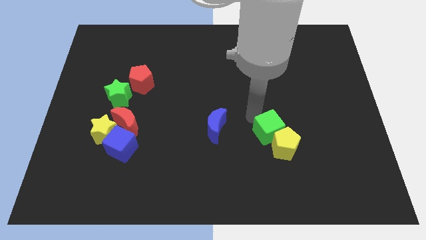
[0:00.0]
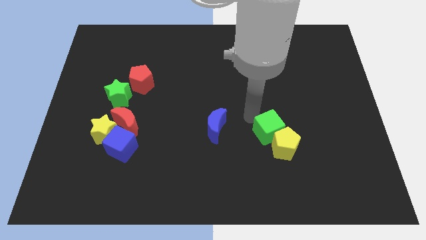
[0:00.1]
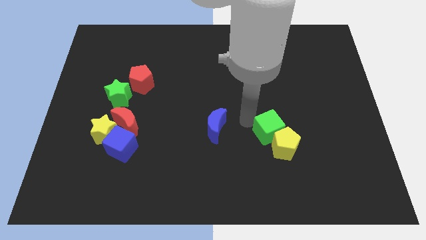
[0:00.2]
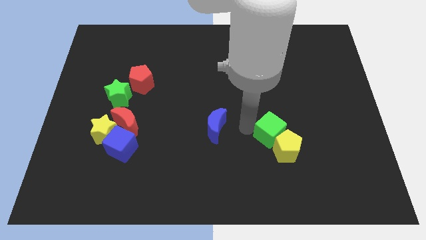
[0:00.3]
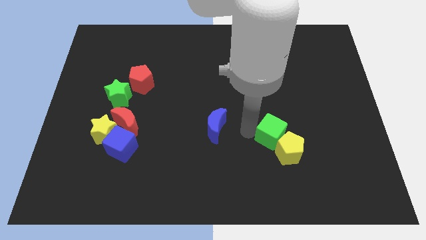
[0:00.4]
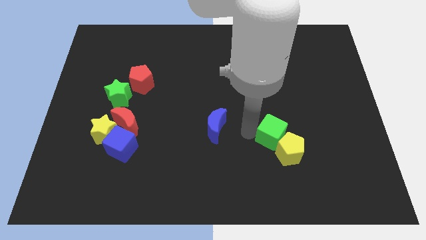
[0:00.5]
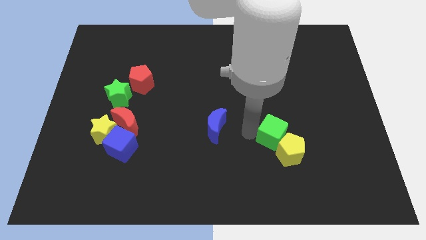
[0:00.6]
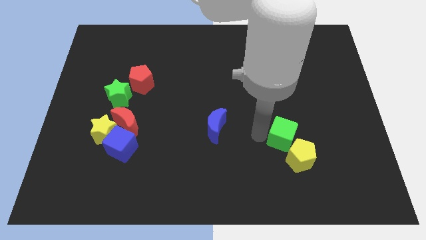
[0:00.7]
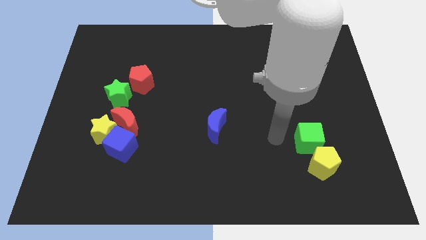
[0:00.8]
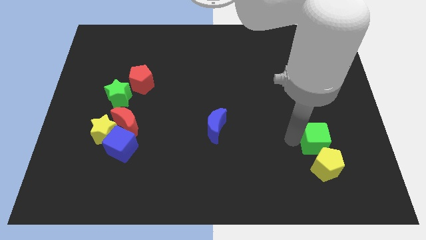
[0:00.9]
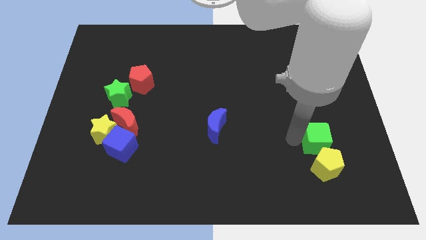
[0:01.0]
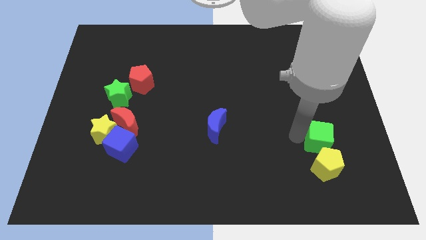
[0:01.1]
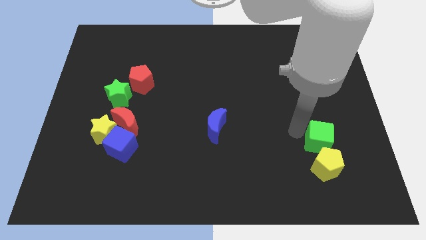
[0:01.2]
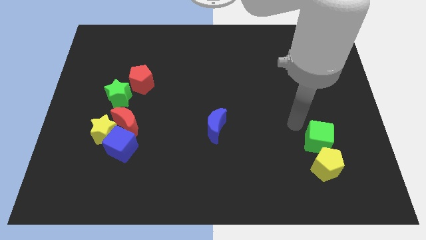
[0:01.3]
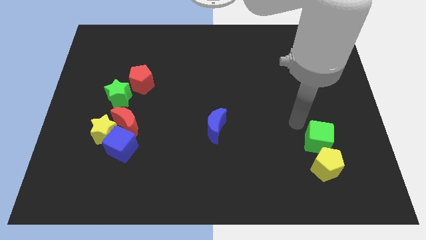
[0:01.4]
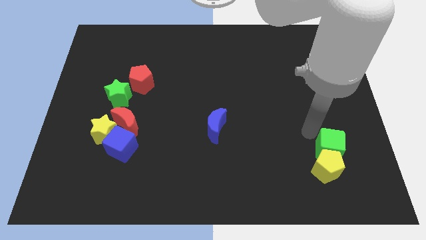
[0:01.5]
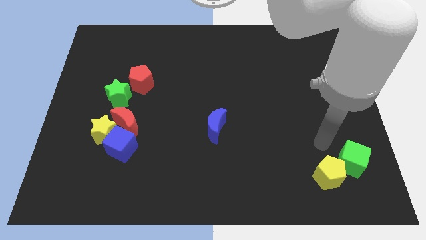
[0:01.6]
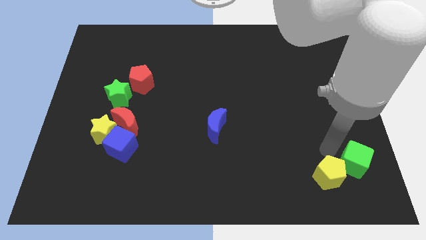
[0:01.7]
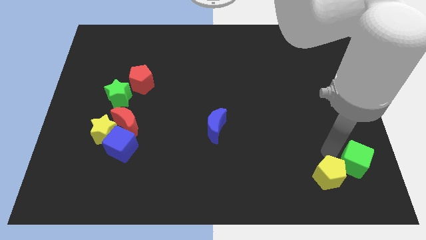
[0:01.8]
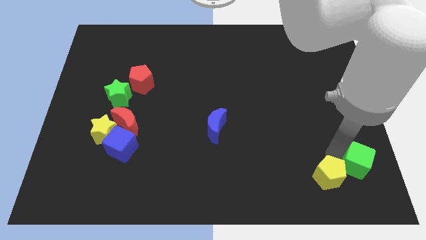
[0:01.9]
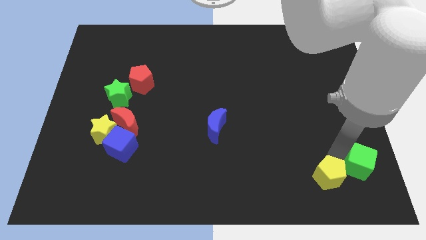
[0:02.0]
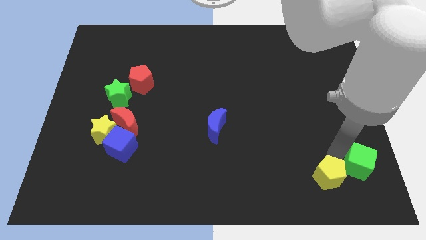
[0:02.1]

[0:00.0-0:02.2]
push both green cube and yellow pentagon to bottom right of the board

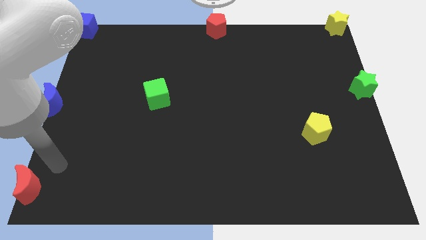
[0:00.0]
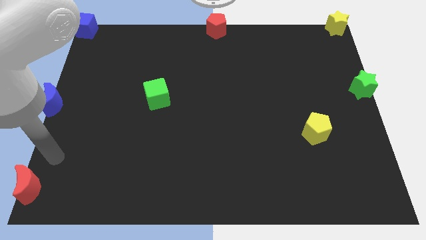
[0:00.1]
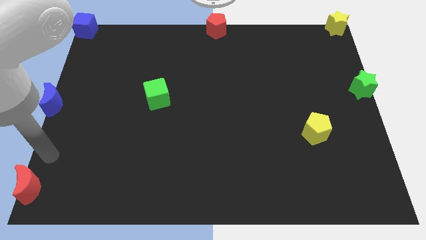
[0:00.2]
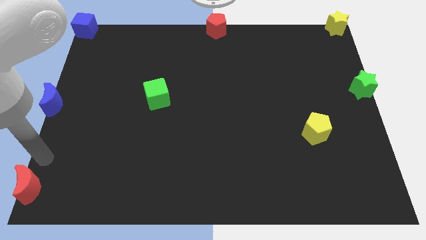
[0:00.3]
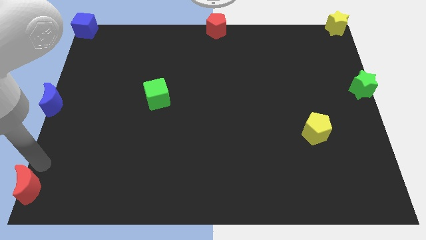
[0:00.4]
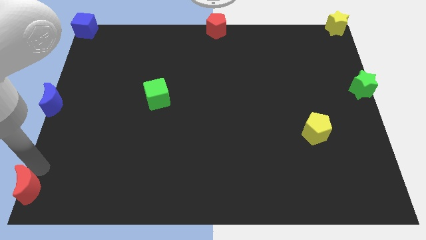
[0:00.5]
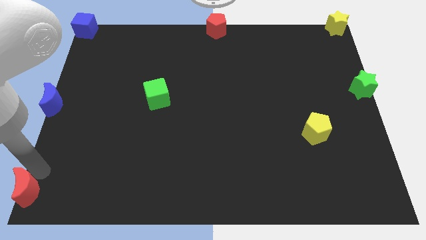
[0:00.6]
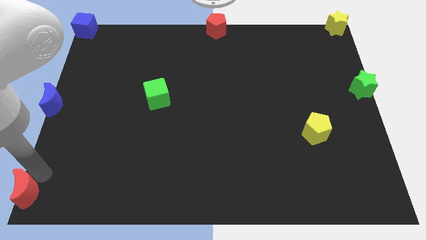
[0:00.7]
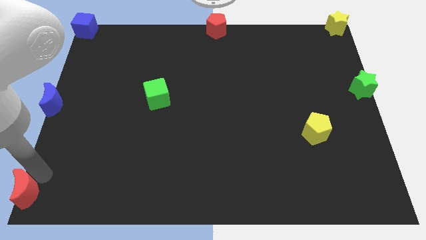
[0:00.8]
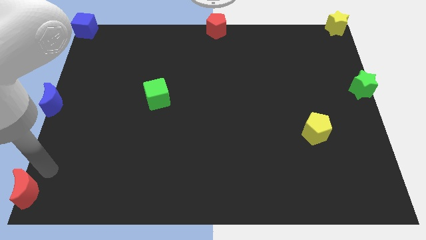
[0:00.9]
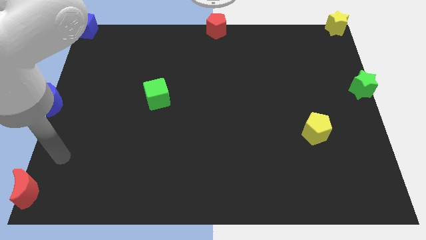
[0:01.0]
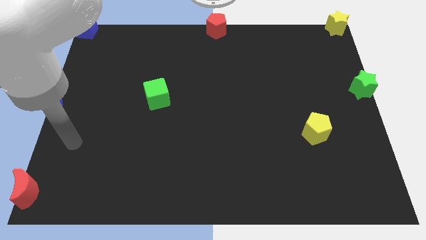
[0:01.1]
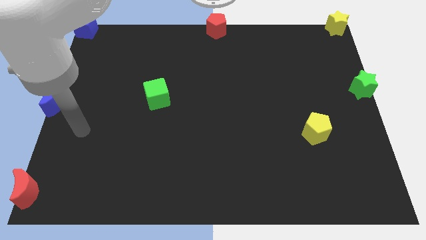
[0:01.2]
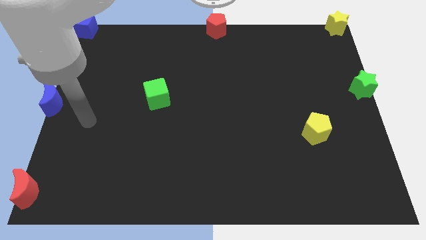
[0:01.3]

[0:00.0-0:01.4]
push the red moon towards the bottom left corner

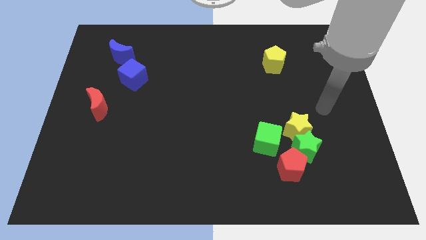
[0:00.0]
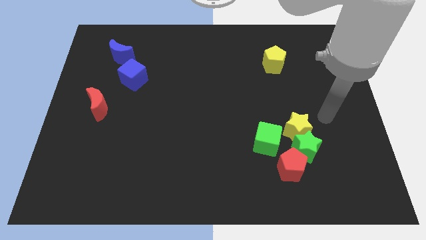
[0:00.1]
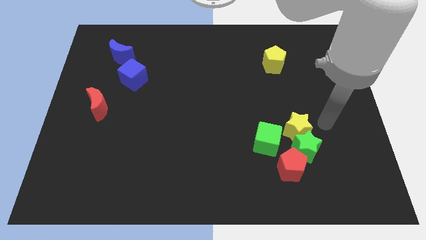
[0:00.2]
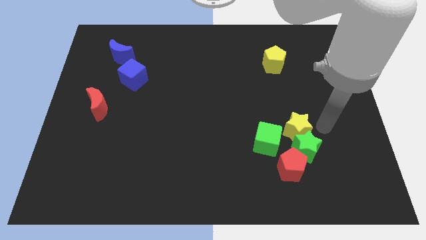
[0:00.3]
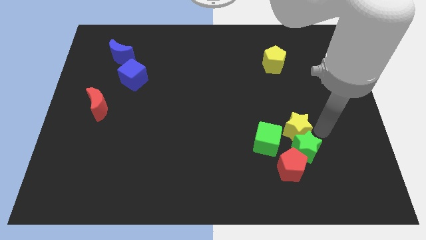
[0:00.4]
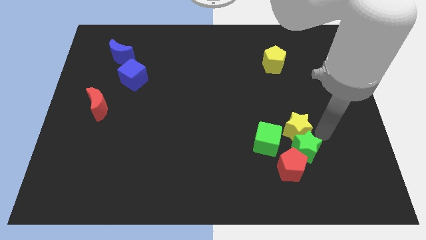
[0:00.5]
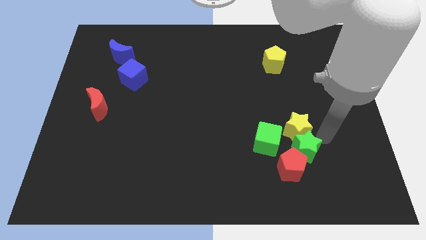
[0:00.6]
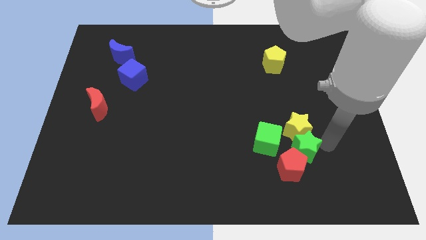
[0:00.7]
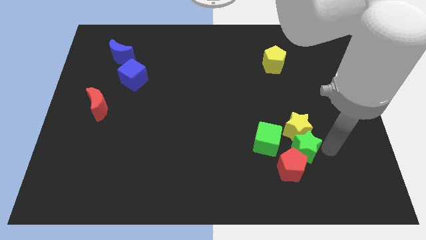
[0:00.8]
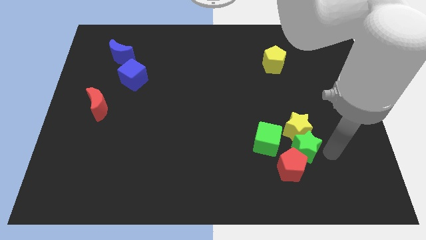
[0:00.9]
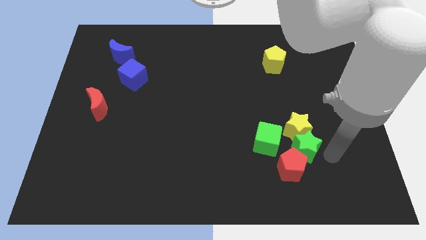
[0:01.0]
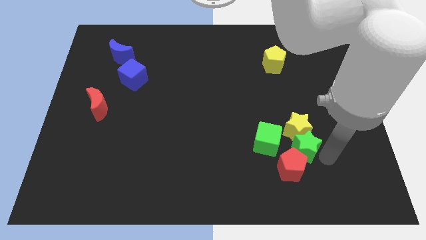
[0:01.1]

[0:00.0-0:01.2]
move your arm on the right side of the green star

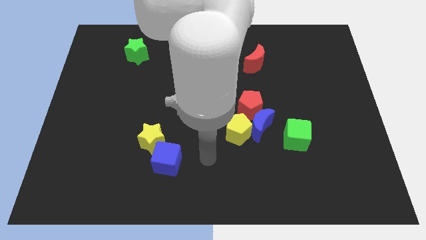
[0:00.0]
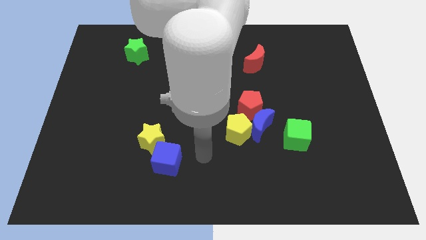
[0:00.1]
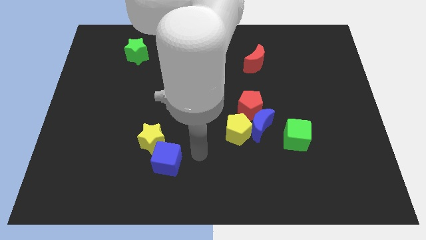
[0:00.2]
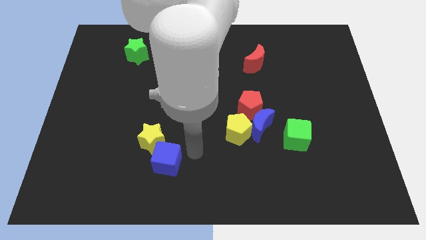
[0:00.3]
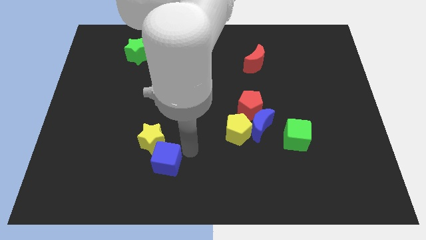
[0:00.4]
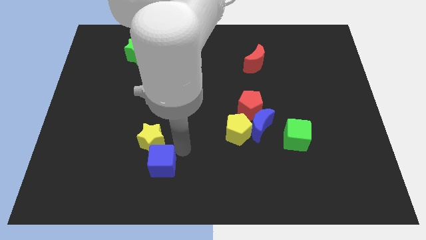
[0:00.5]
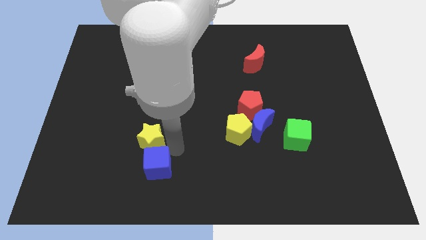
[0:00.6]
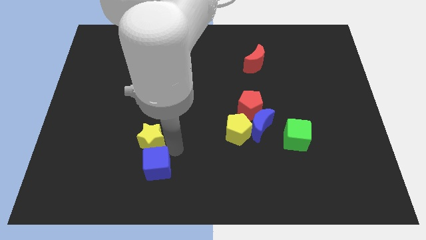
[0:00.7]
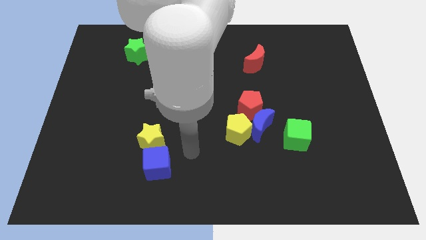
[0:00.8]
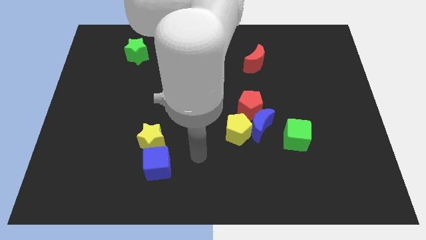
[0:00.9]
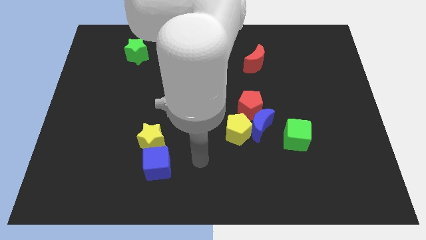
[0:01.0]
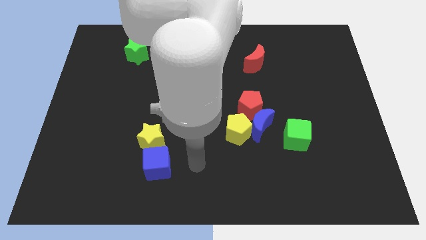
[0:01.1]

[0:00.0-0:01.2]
move the blue cube to the left slightly

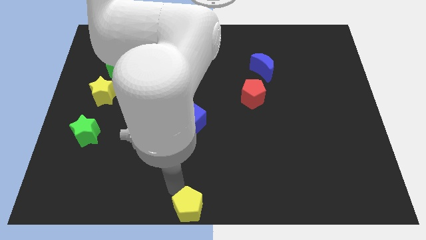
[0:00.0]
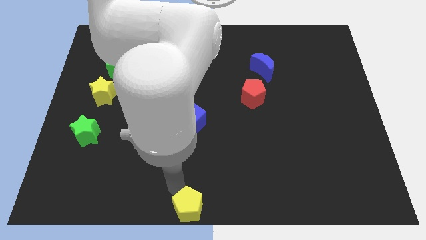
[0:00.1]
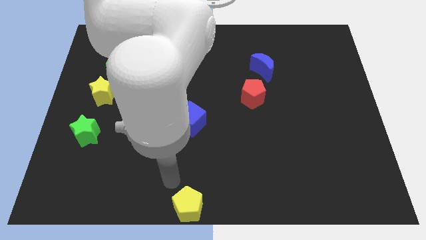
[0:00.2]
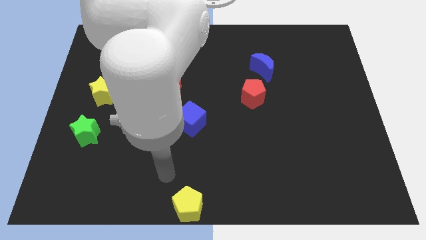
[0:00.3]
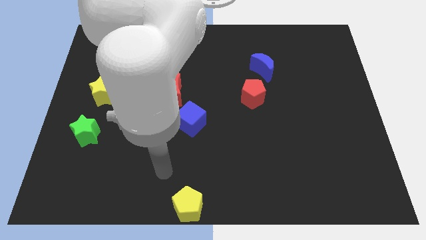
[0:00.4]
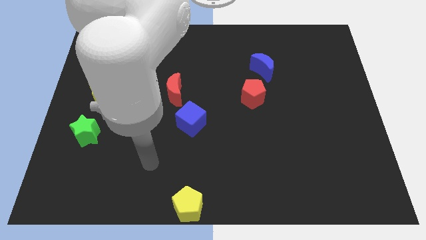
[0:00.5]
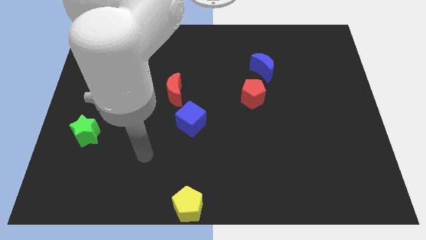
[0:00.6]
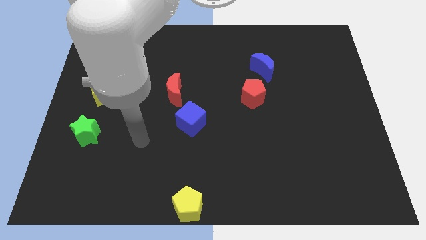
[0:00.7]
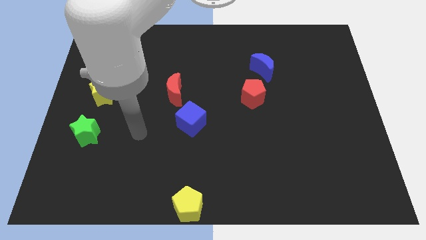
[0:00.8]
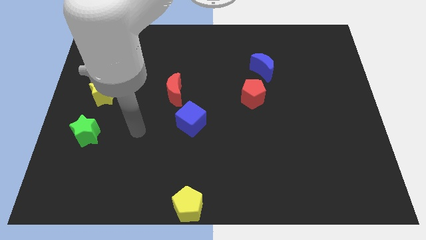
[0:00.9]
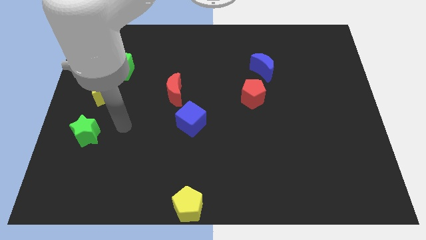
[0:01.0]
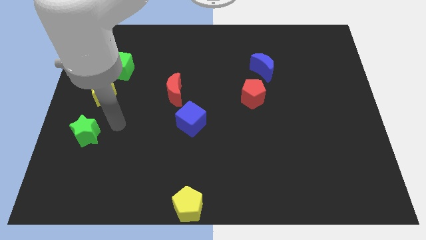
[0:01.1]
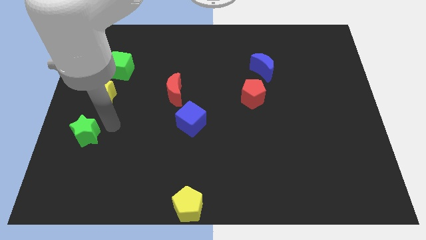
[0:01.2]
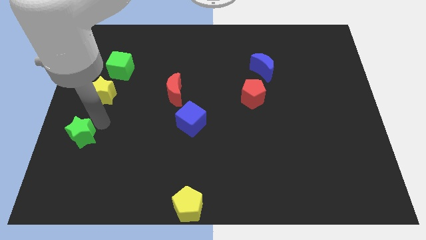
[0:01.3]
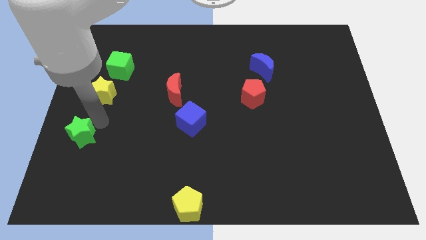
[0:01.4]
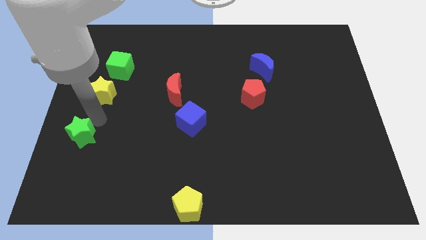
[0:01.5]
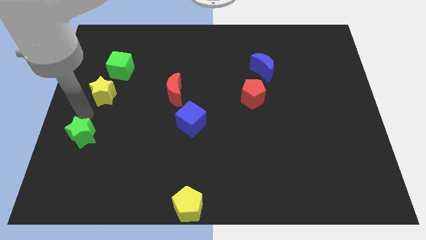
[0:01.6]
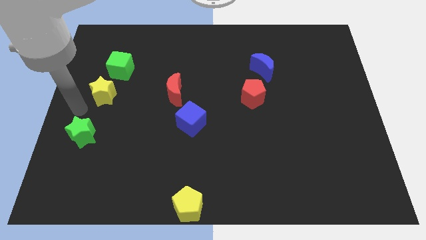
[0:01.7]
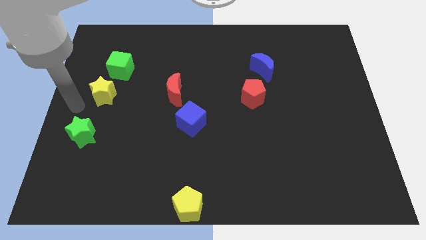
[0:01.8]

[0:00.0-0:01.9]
put your hand above the green star

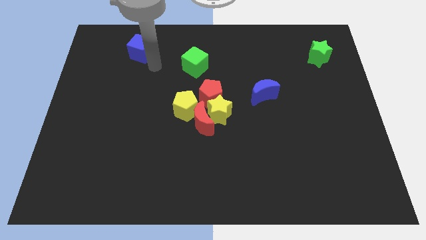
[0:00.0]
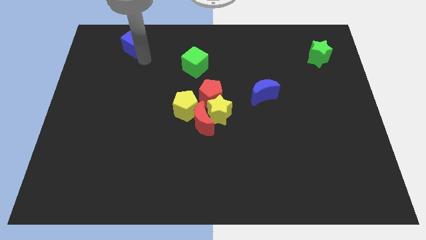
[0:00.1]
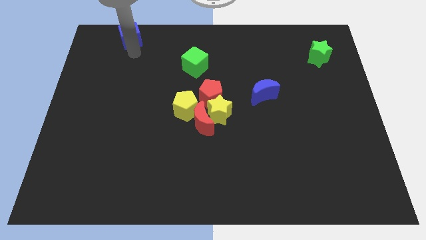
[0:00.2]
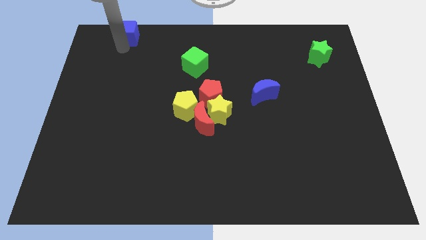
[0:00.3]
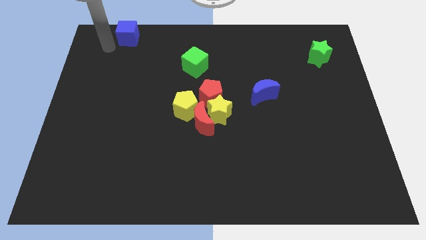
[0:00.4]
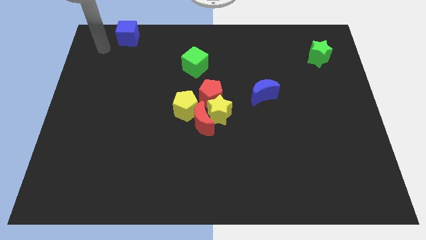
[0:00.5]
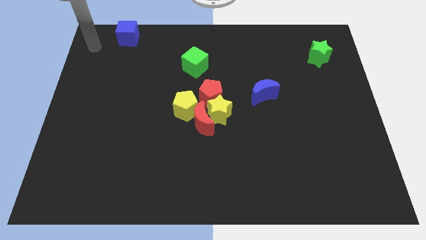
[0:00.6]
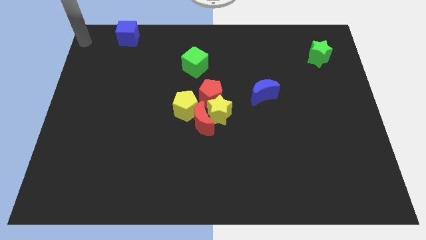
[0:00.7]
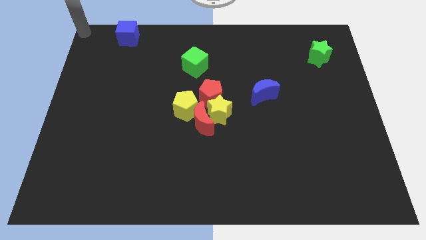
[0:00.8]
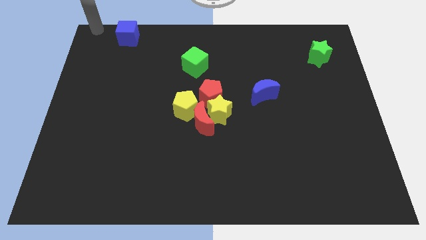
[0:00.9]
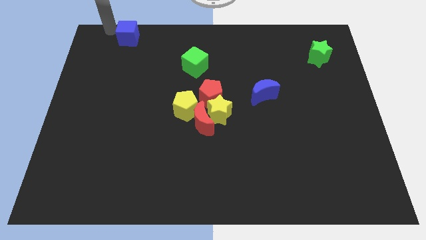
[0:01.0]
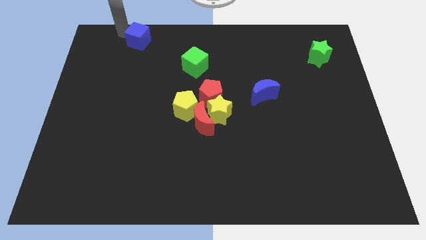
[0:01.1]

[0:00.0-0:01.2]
move the blue cube slightly to the top left of the board
